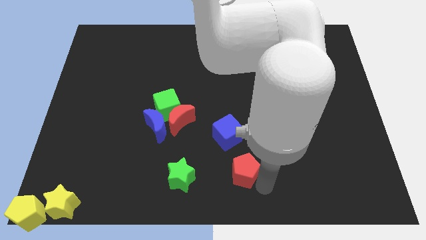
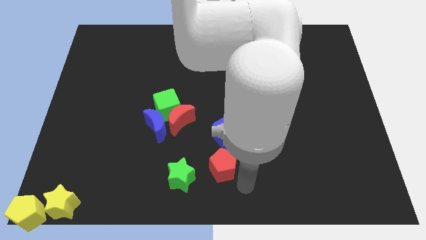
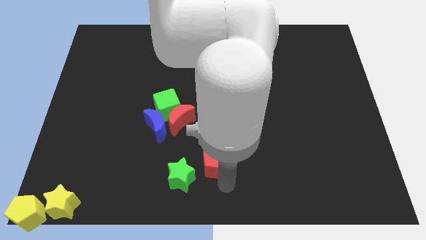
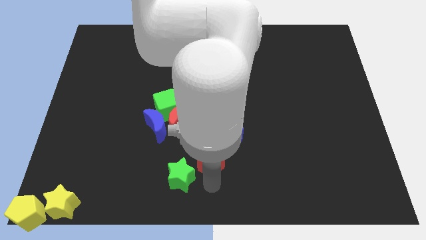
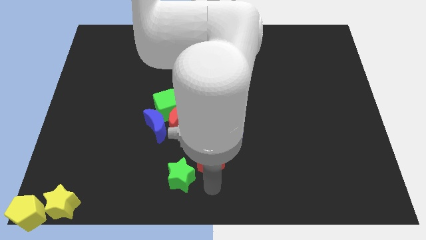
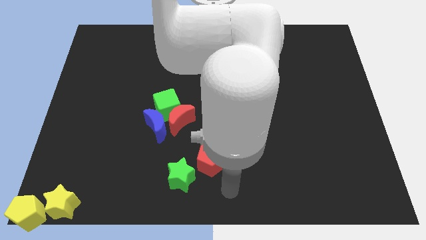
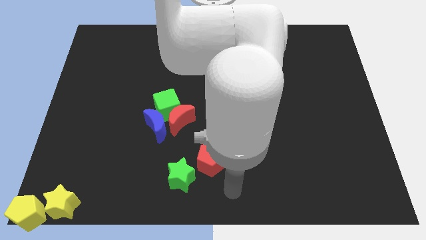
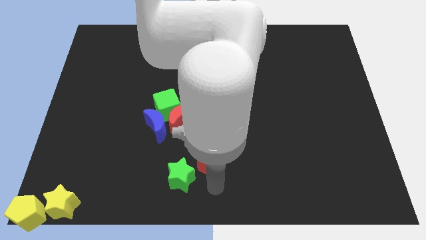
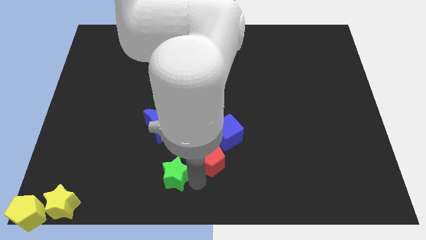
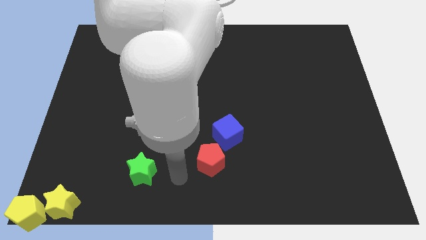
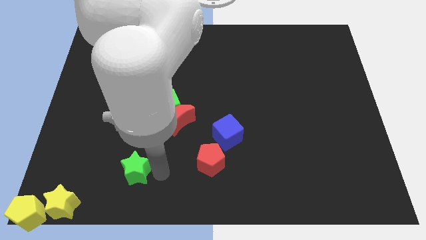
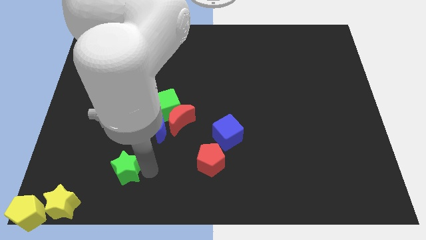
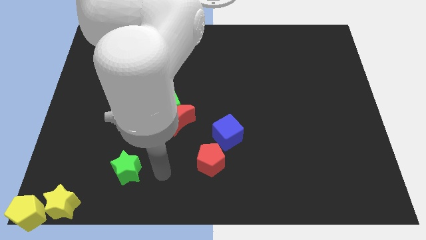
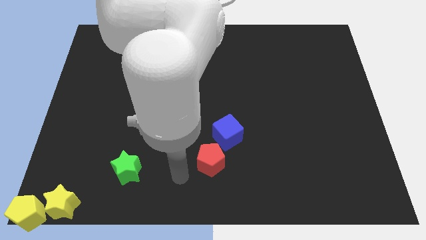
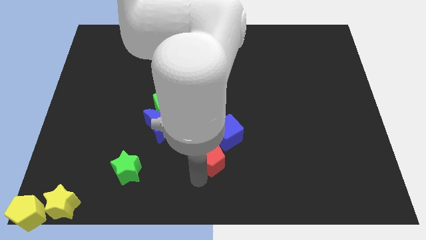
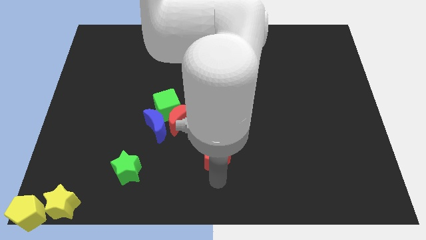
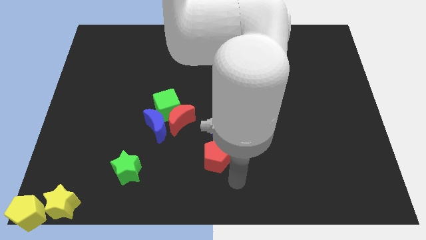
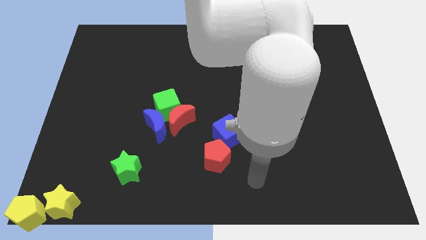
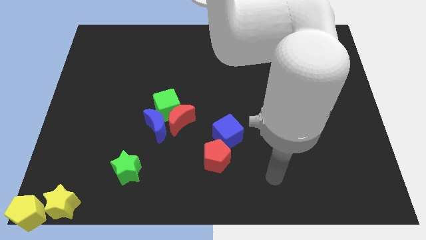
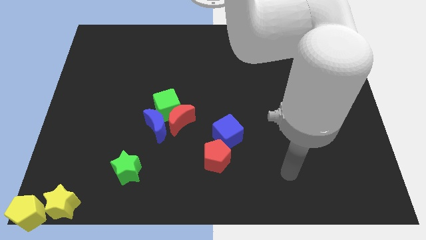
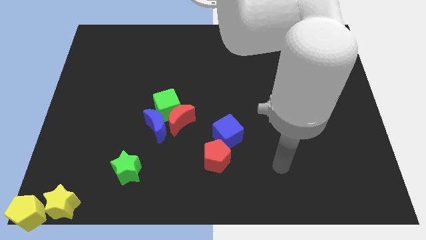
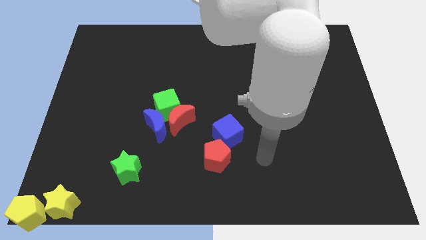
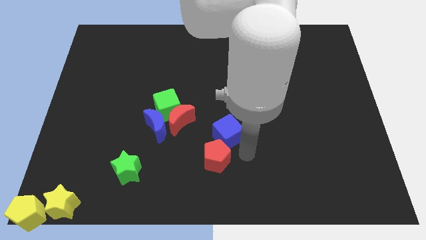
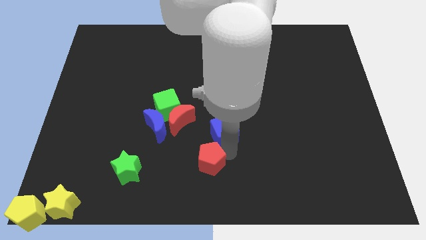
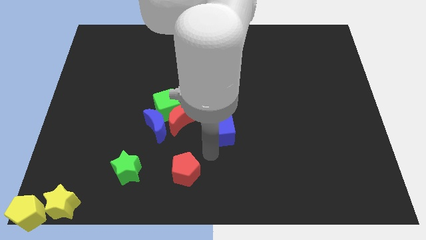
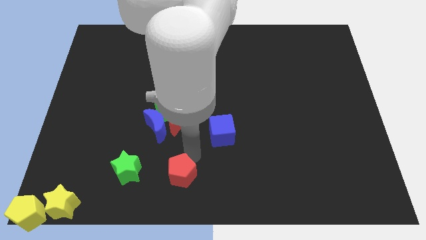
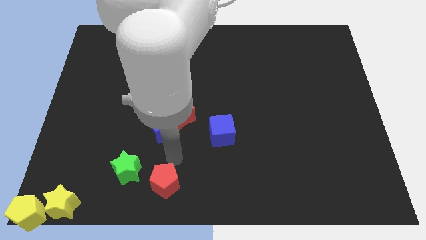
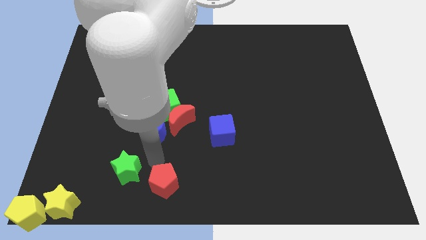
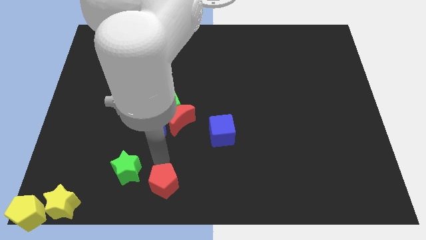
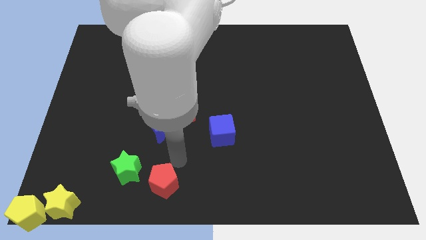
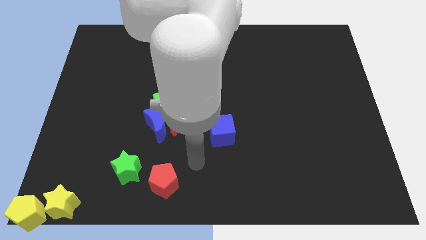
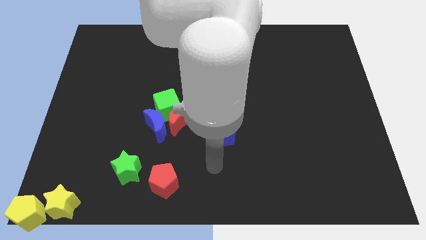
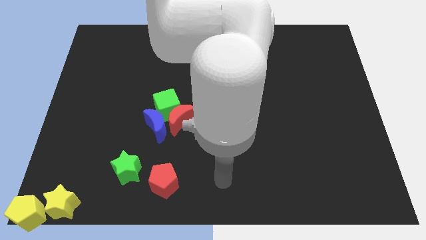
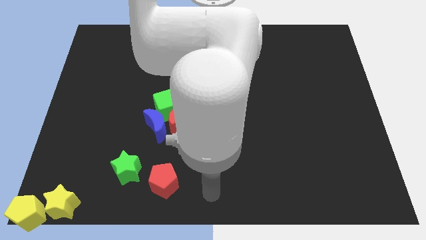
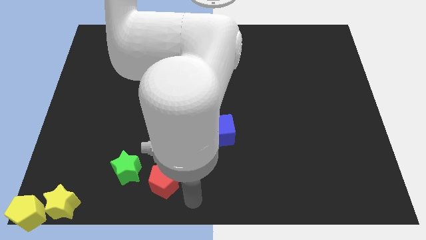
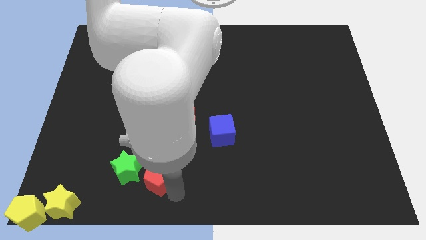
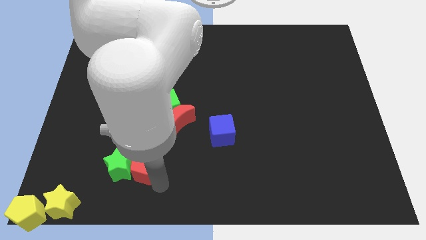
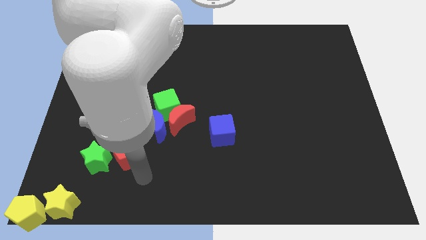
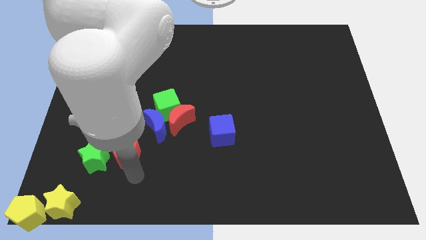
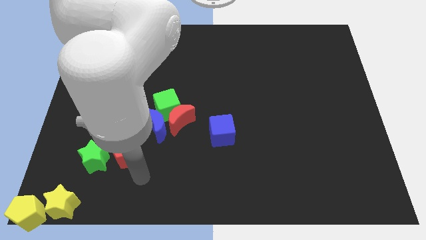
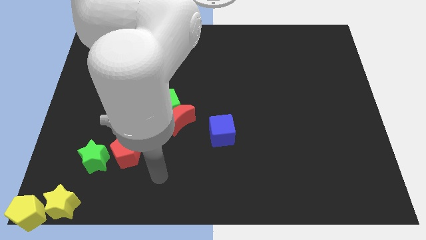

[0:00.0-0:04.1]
drag the green star and red pentagon to left side

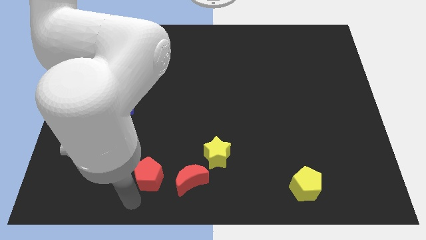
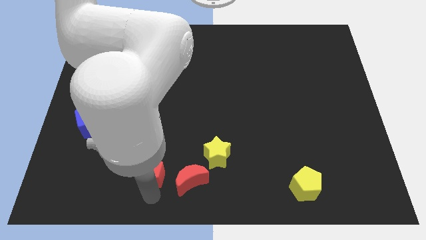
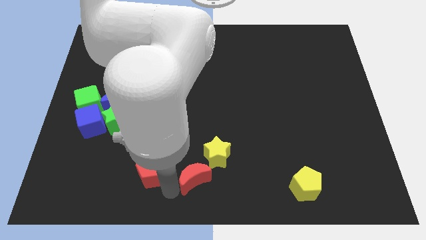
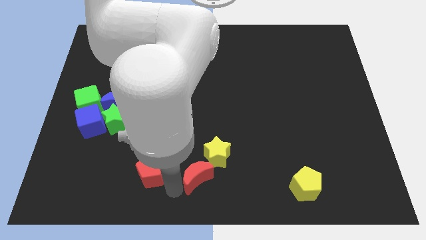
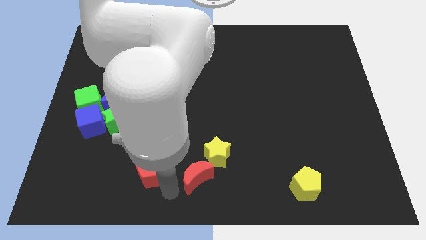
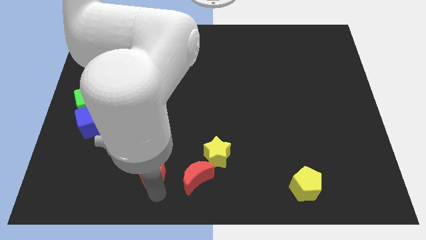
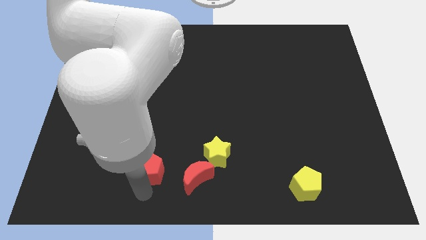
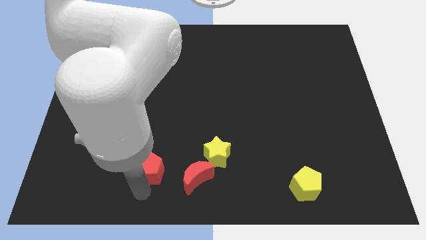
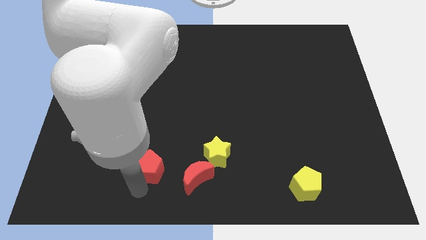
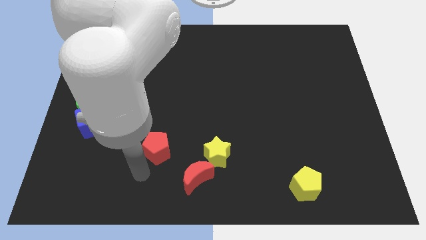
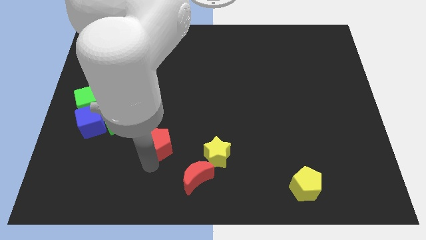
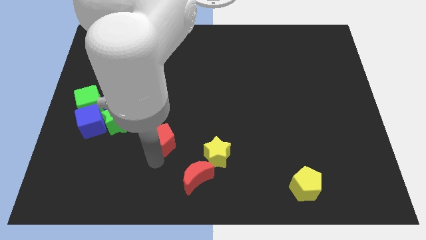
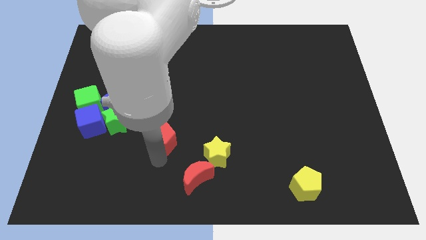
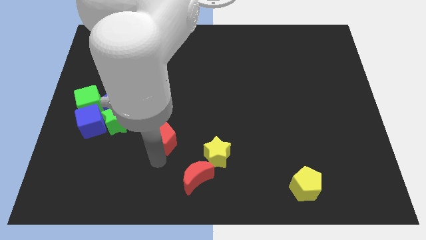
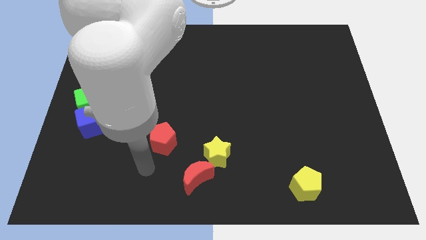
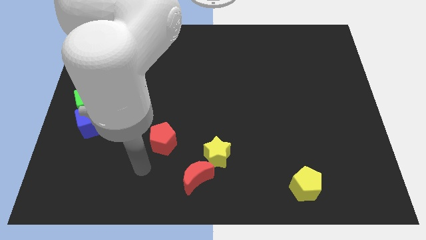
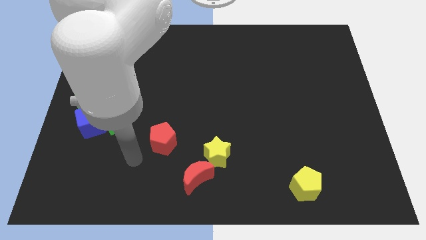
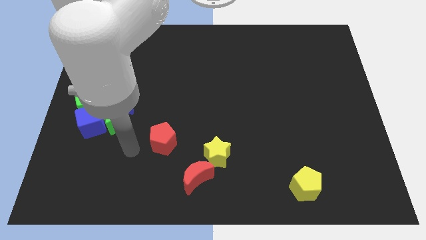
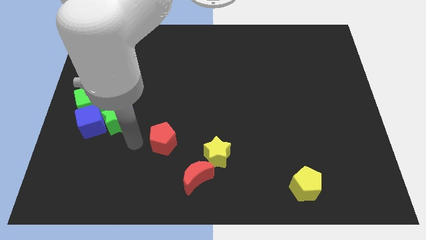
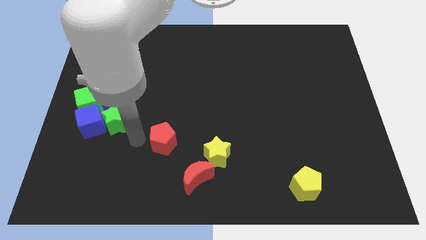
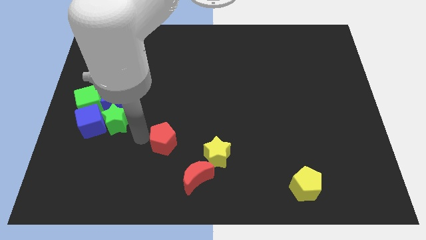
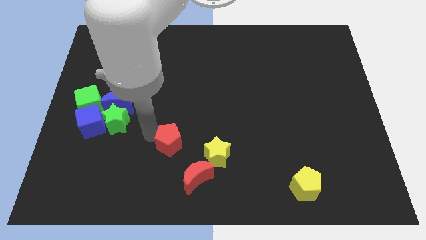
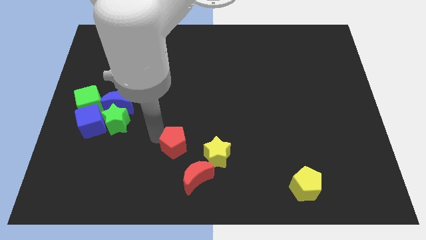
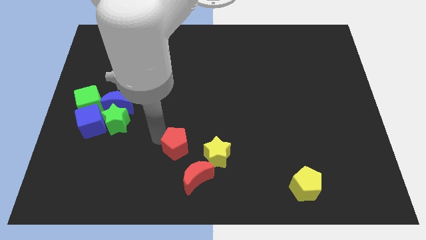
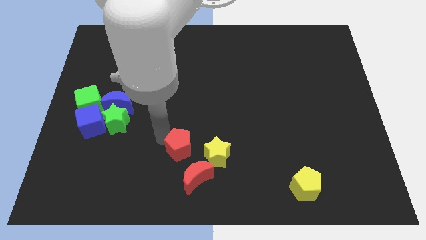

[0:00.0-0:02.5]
push red pentagon towards yellow star

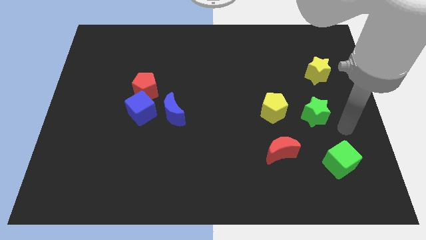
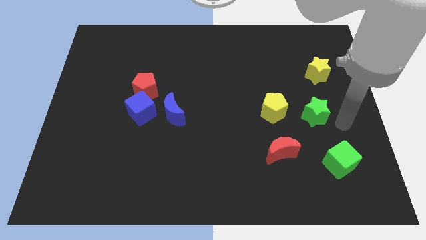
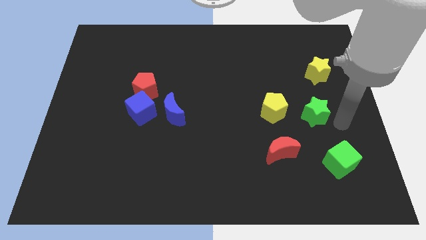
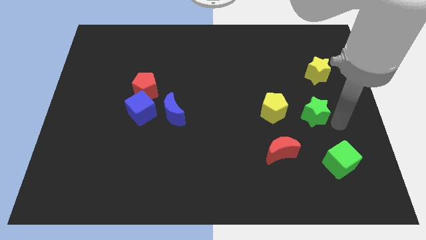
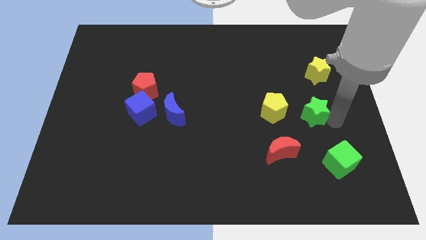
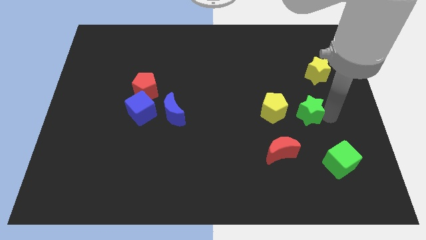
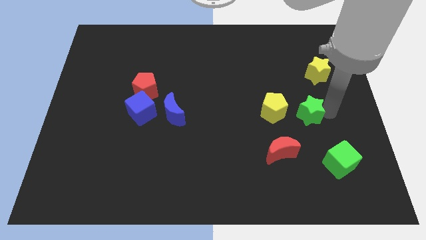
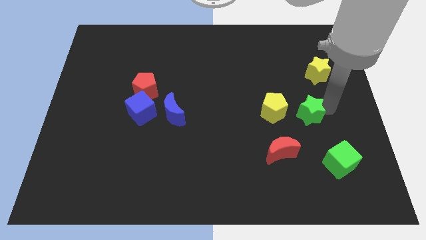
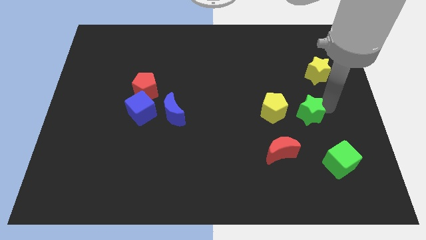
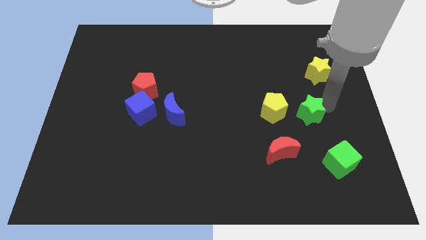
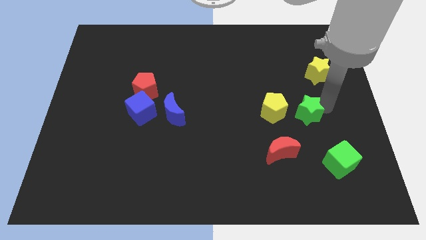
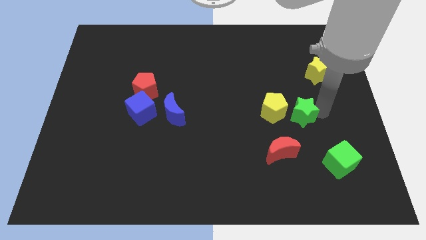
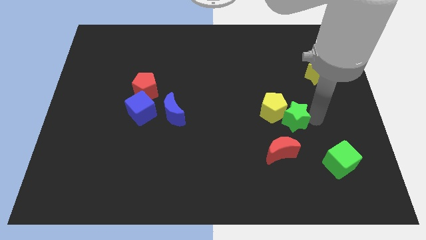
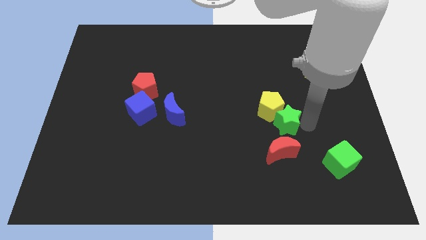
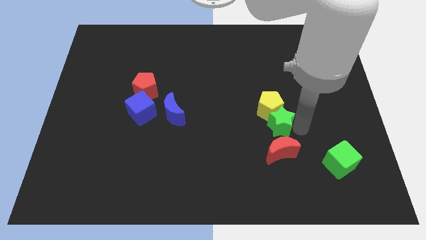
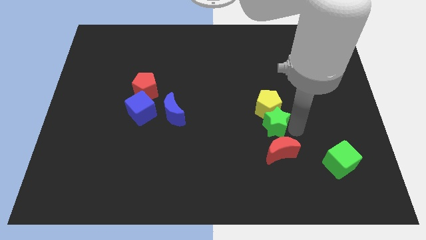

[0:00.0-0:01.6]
push green star in between yellow pentagon and red moon

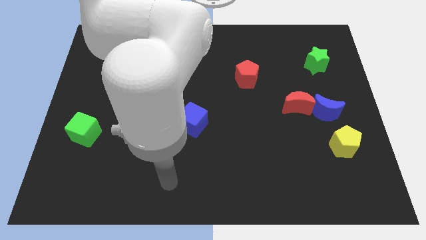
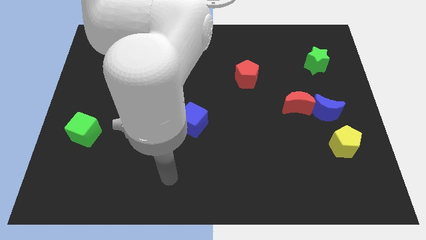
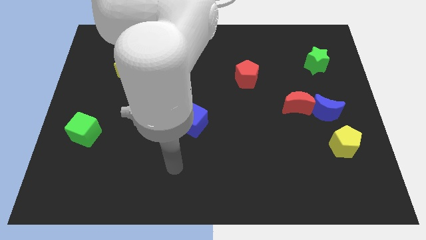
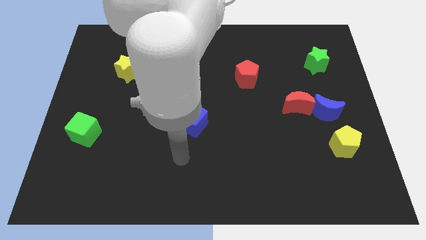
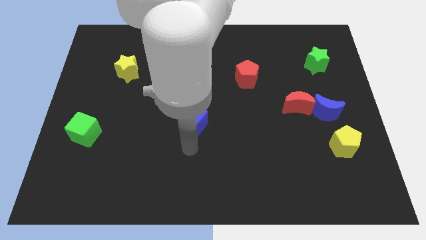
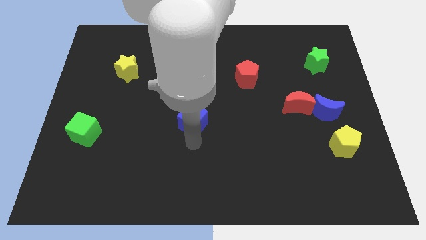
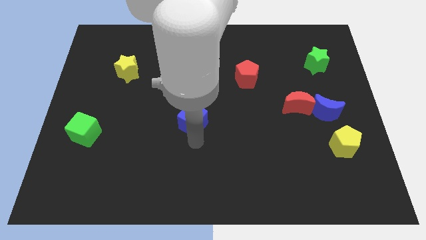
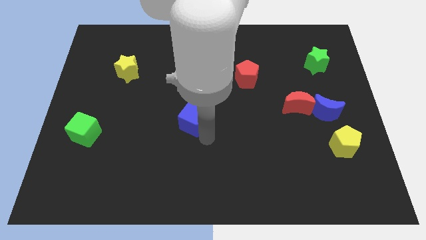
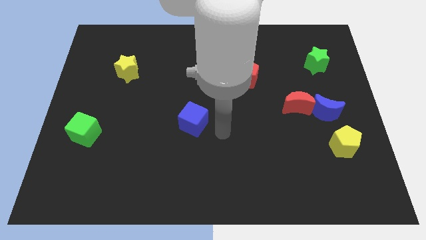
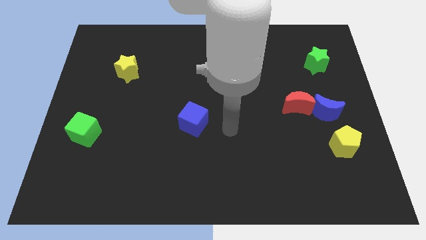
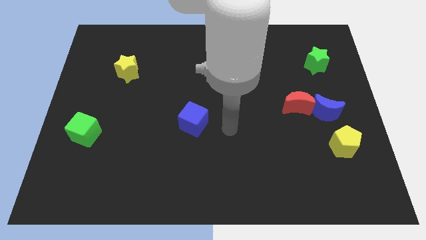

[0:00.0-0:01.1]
move your arm at the right of the blue cube
